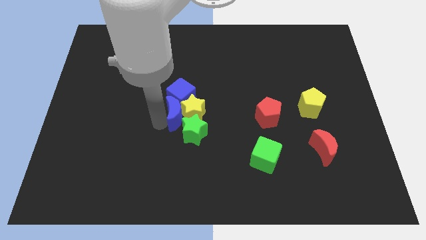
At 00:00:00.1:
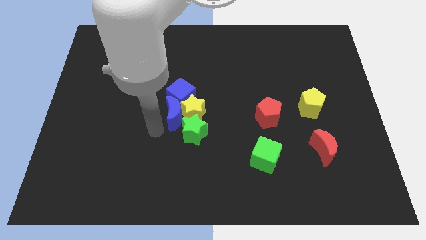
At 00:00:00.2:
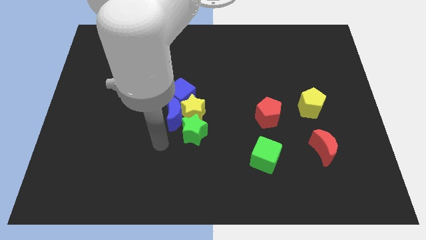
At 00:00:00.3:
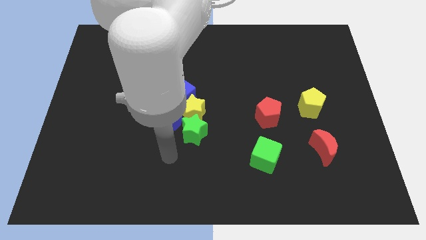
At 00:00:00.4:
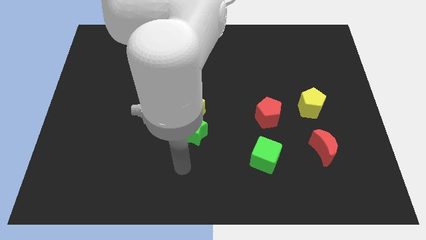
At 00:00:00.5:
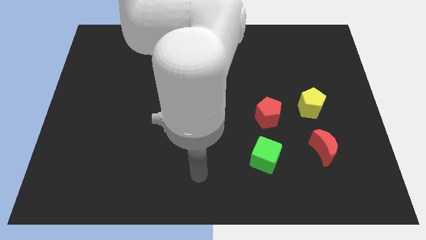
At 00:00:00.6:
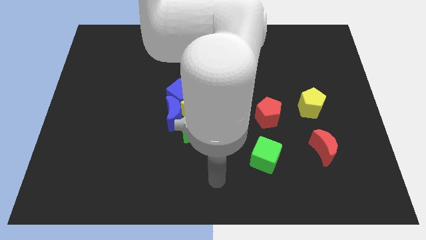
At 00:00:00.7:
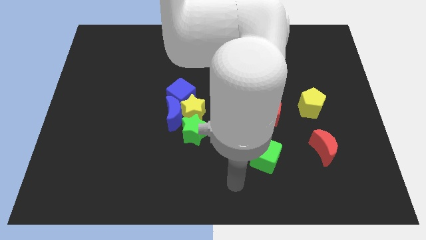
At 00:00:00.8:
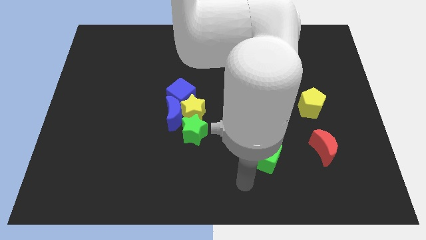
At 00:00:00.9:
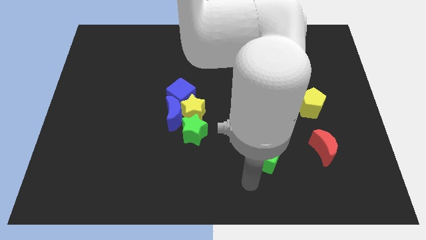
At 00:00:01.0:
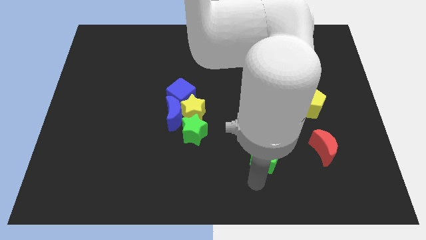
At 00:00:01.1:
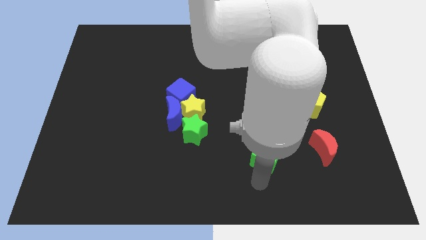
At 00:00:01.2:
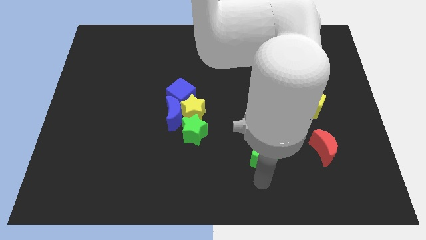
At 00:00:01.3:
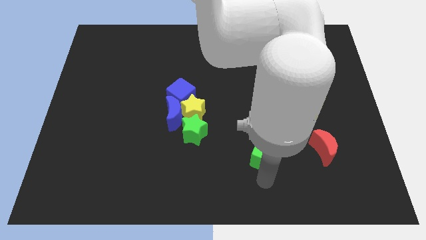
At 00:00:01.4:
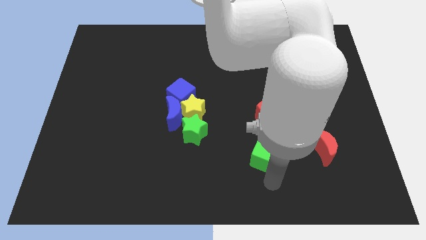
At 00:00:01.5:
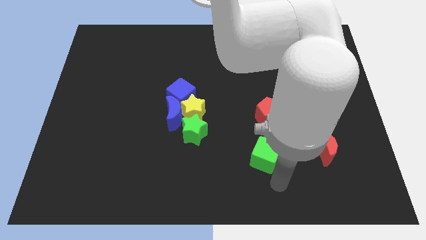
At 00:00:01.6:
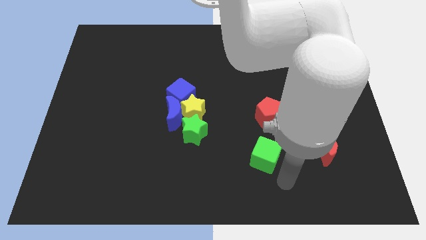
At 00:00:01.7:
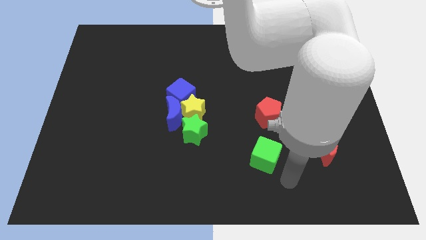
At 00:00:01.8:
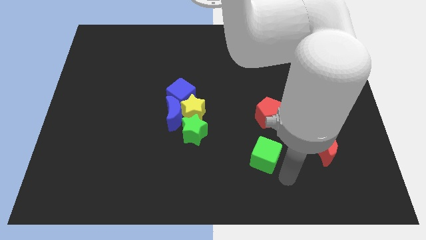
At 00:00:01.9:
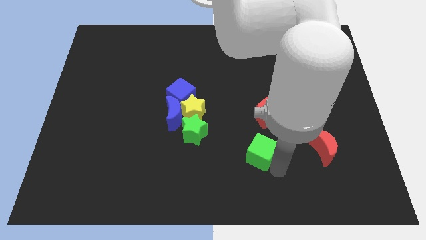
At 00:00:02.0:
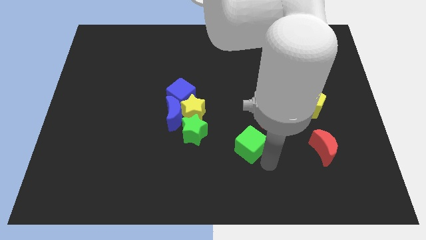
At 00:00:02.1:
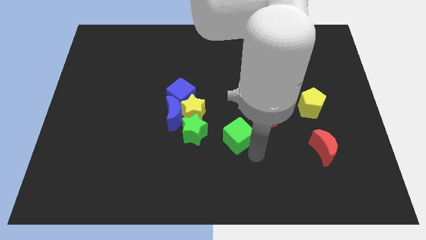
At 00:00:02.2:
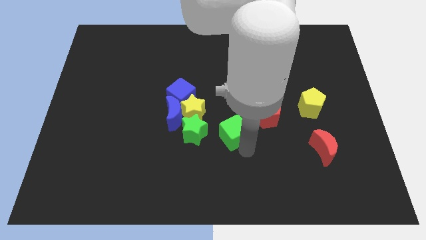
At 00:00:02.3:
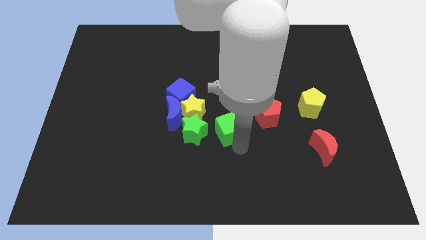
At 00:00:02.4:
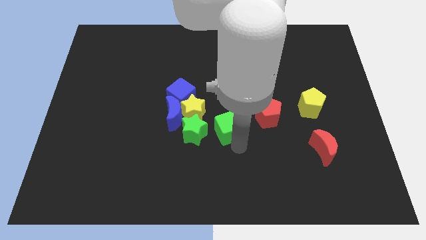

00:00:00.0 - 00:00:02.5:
push green cube beside green star

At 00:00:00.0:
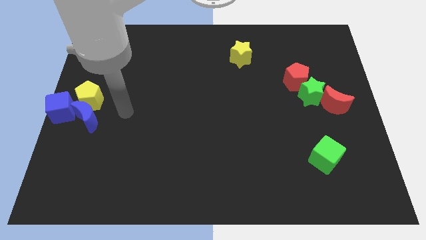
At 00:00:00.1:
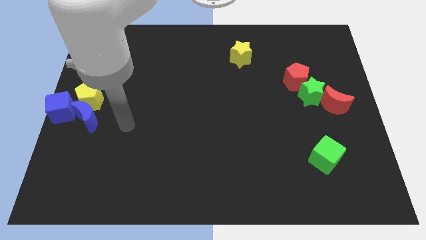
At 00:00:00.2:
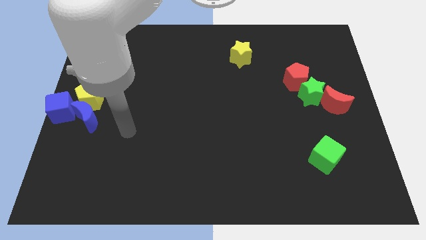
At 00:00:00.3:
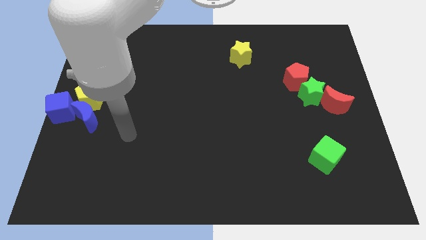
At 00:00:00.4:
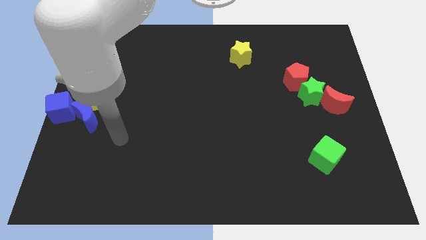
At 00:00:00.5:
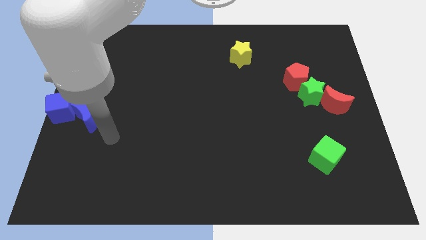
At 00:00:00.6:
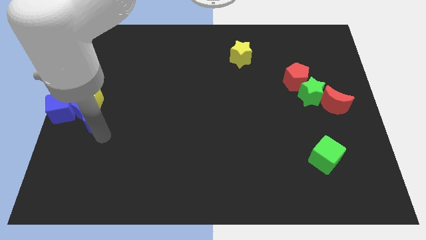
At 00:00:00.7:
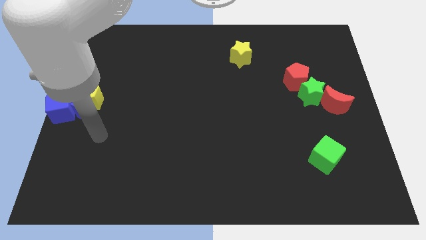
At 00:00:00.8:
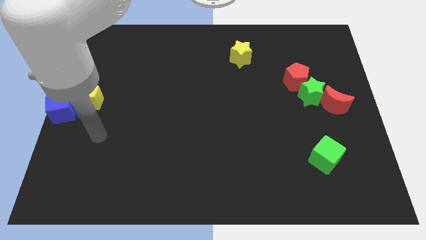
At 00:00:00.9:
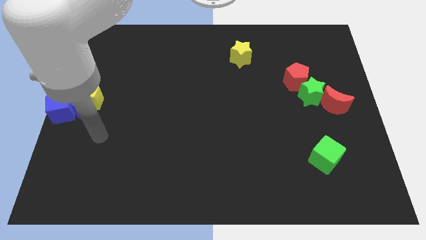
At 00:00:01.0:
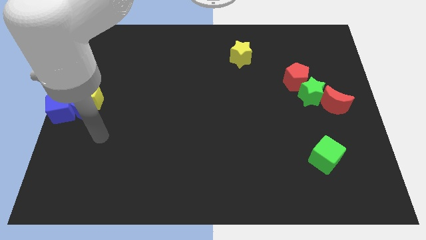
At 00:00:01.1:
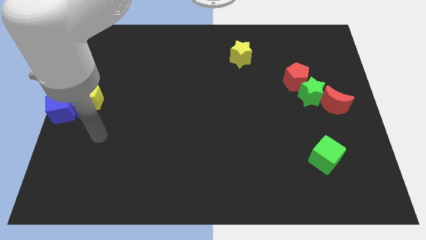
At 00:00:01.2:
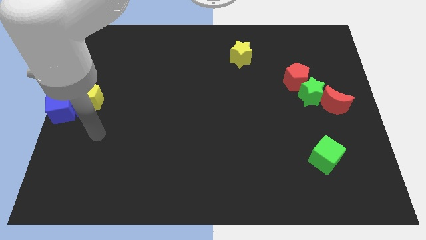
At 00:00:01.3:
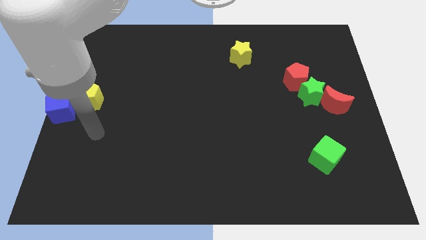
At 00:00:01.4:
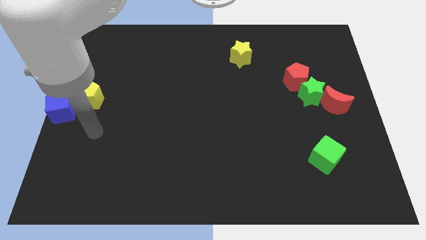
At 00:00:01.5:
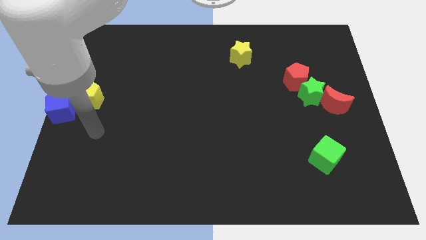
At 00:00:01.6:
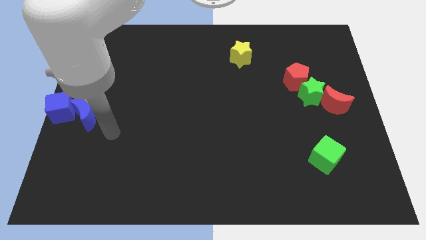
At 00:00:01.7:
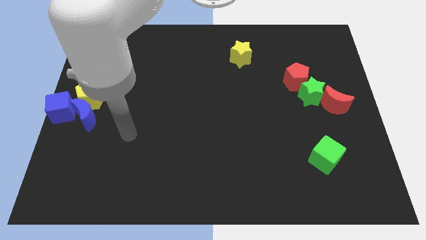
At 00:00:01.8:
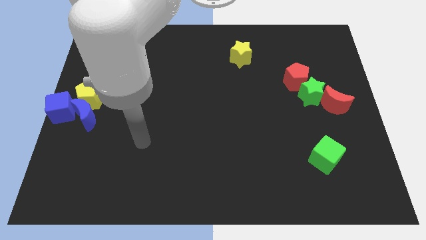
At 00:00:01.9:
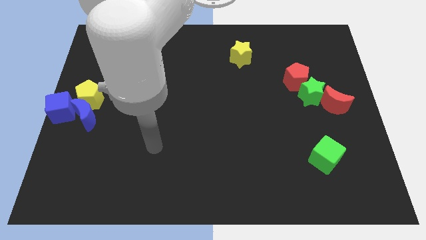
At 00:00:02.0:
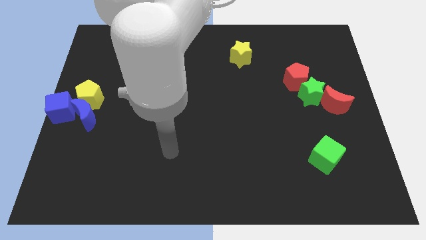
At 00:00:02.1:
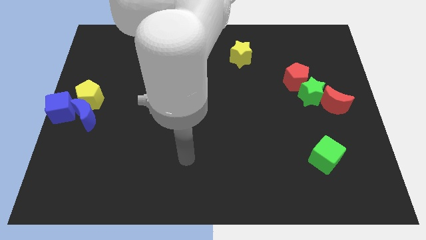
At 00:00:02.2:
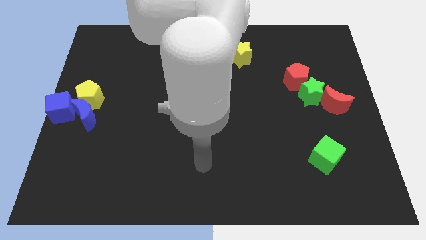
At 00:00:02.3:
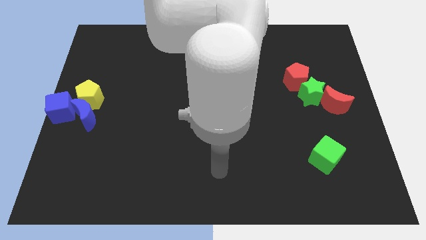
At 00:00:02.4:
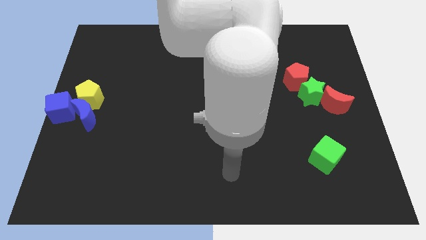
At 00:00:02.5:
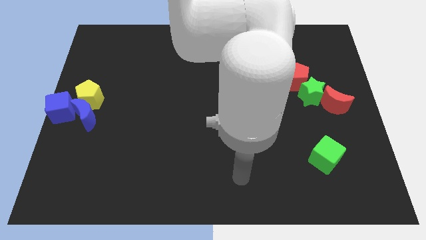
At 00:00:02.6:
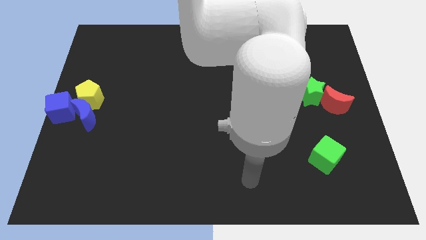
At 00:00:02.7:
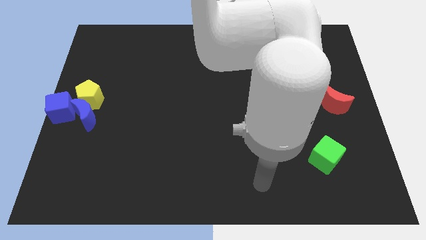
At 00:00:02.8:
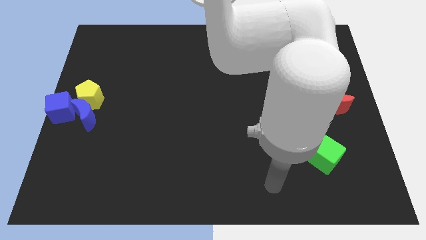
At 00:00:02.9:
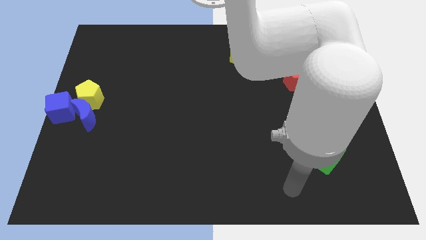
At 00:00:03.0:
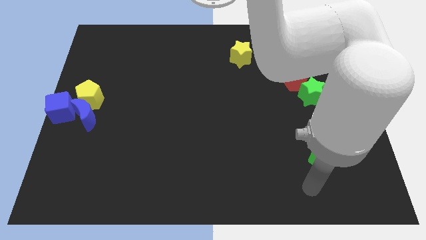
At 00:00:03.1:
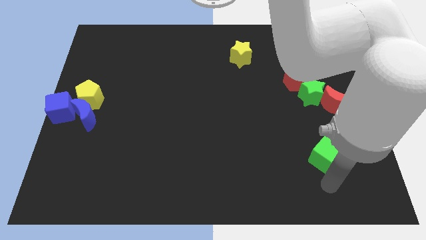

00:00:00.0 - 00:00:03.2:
push the blue moon close to the blue cube

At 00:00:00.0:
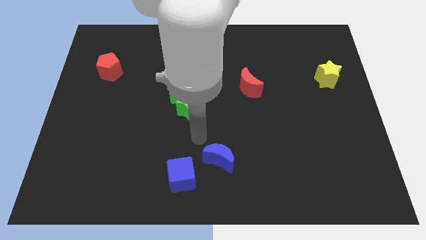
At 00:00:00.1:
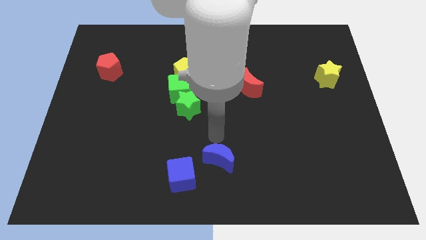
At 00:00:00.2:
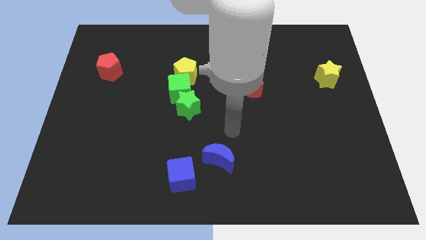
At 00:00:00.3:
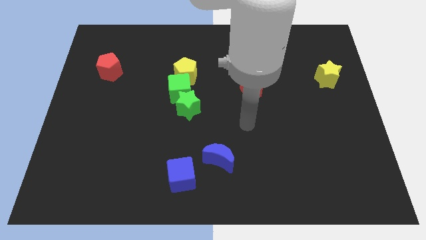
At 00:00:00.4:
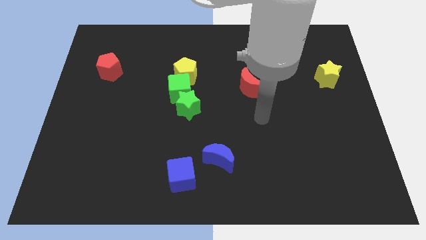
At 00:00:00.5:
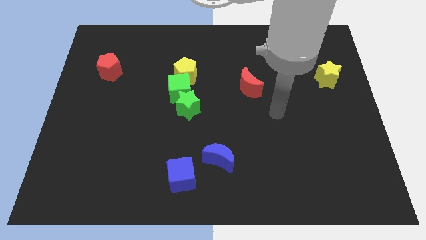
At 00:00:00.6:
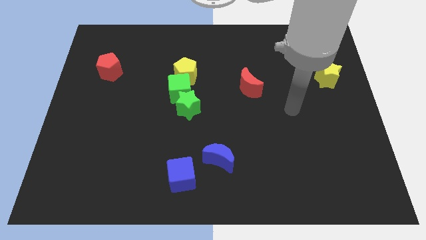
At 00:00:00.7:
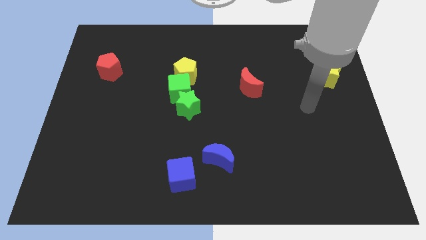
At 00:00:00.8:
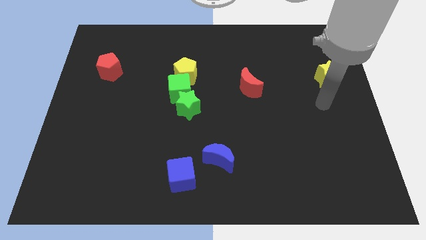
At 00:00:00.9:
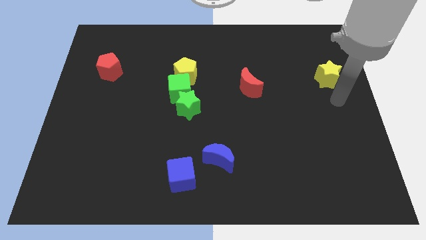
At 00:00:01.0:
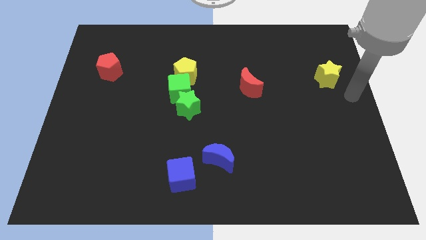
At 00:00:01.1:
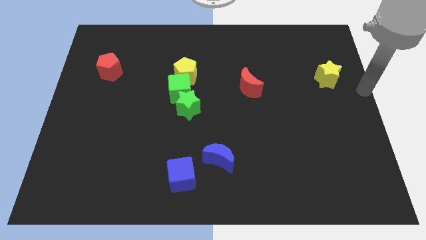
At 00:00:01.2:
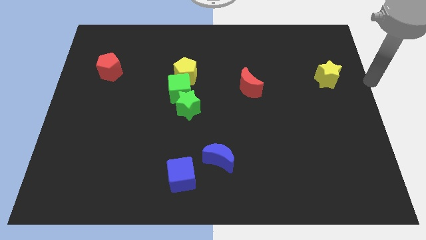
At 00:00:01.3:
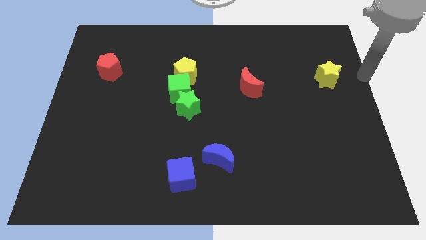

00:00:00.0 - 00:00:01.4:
point your hand at the right side of the yellow star

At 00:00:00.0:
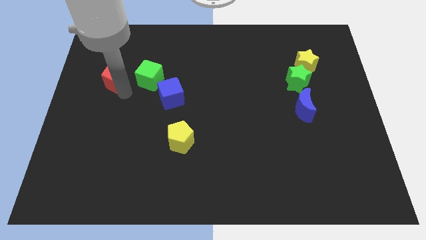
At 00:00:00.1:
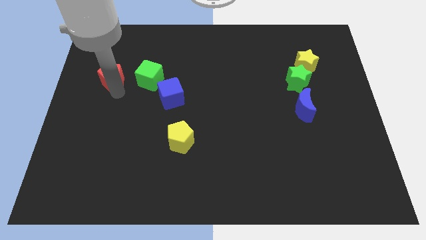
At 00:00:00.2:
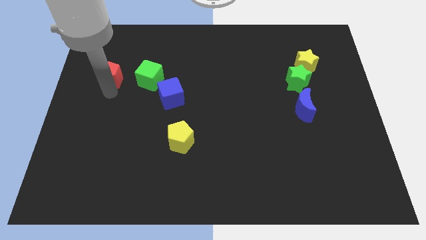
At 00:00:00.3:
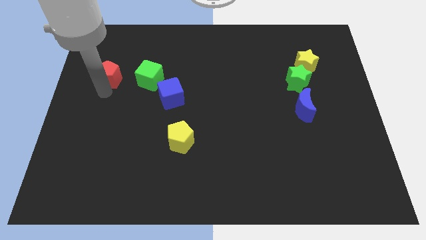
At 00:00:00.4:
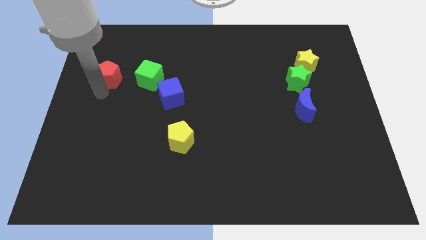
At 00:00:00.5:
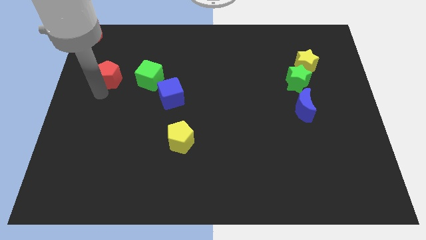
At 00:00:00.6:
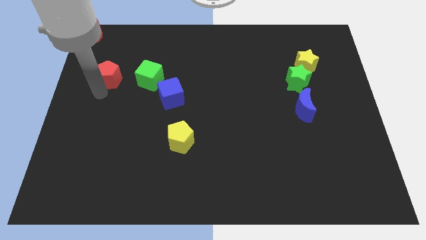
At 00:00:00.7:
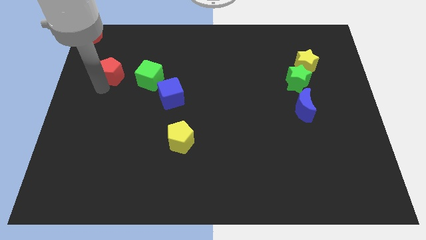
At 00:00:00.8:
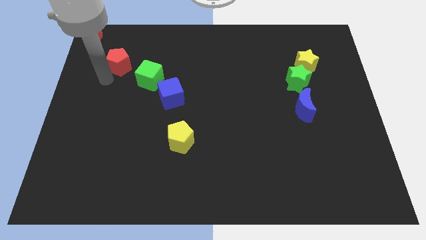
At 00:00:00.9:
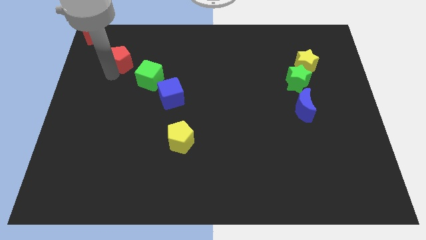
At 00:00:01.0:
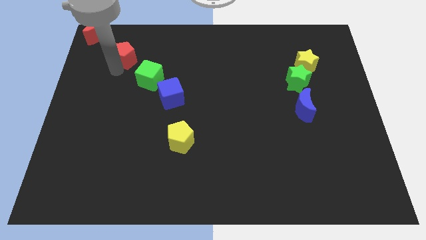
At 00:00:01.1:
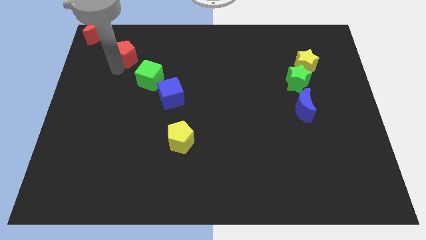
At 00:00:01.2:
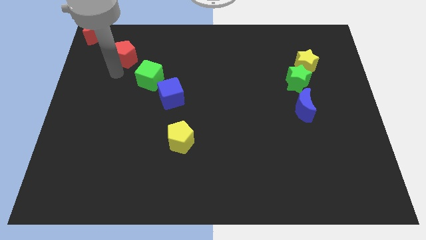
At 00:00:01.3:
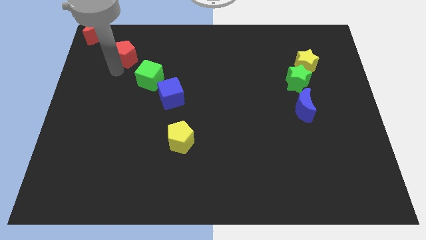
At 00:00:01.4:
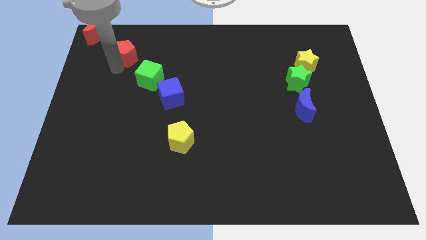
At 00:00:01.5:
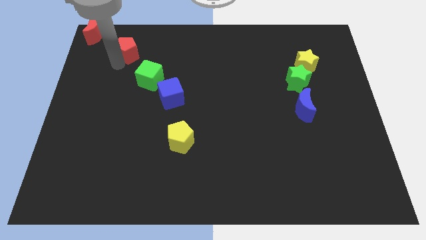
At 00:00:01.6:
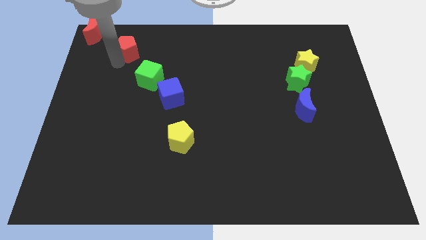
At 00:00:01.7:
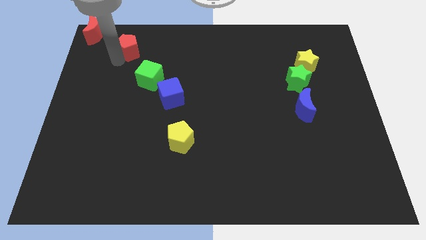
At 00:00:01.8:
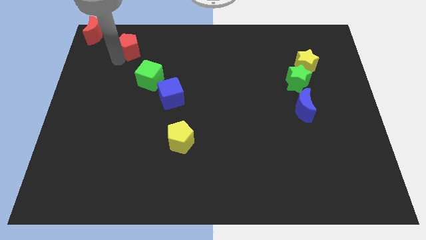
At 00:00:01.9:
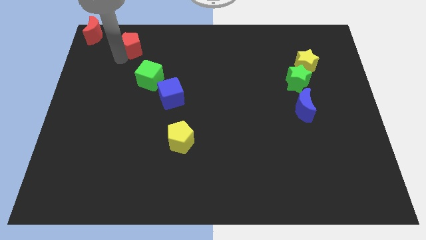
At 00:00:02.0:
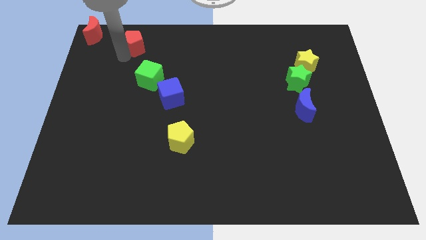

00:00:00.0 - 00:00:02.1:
push the red pentagon towards the top of the board
